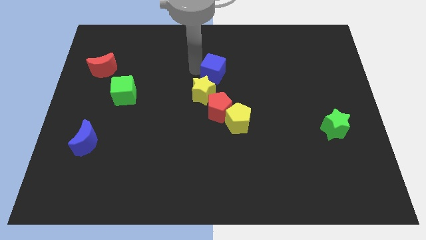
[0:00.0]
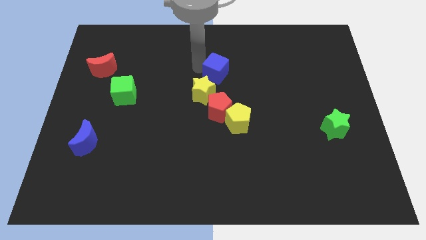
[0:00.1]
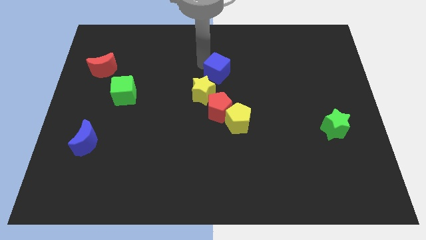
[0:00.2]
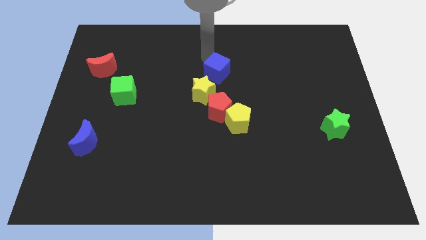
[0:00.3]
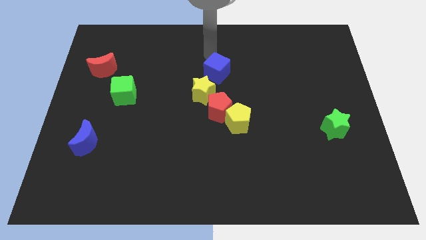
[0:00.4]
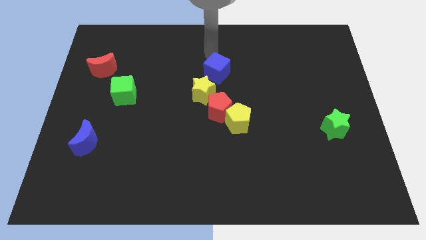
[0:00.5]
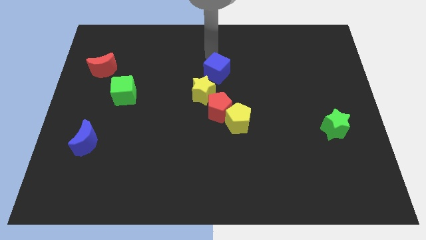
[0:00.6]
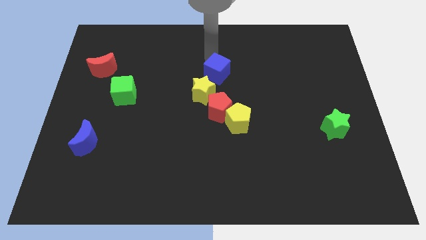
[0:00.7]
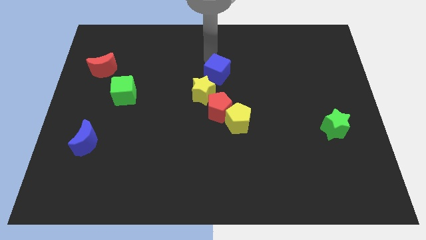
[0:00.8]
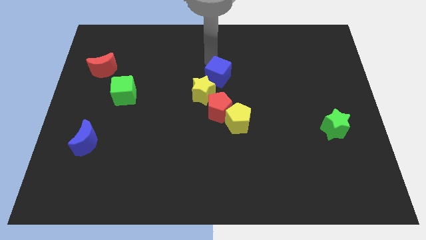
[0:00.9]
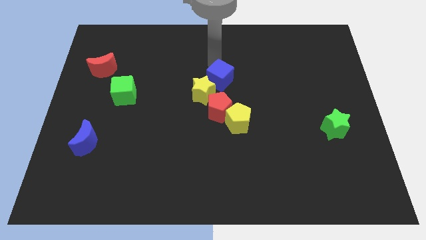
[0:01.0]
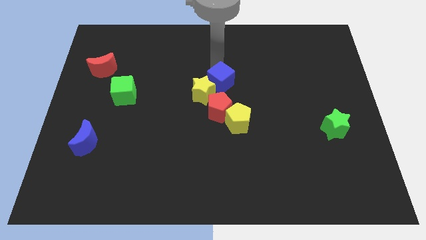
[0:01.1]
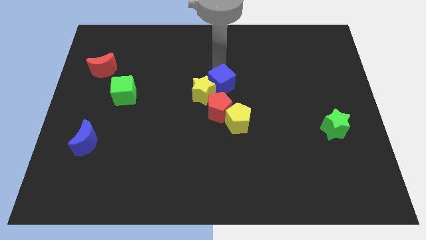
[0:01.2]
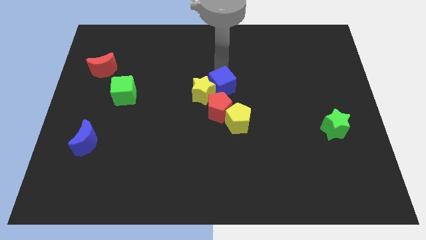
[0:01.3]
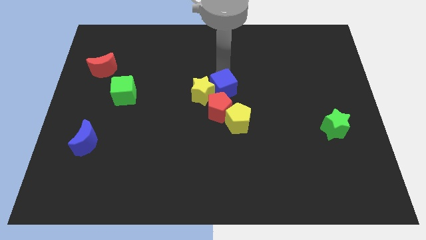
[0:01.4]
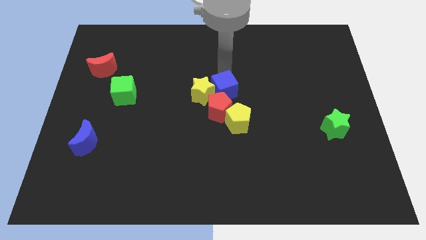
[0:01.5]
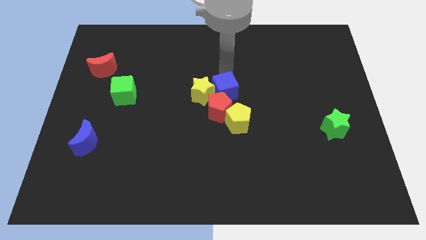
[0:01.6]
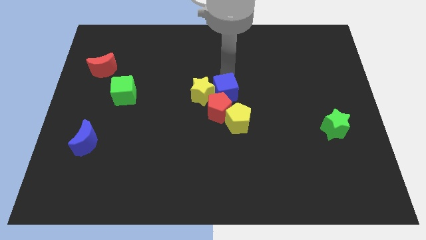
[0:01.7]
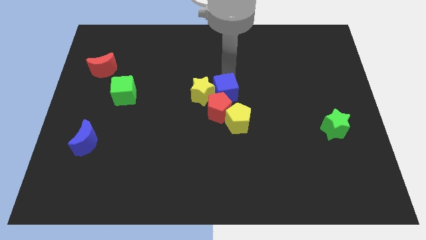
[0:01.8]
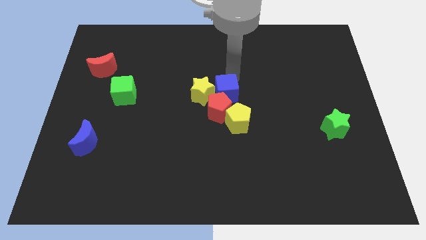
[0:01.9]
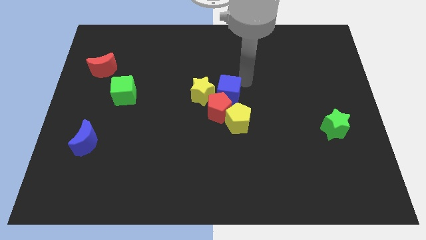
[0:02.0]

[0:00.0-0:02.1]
move the blue cube on top of the red pentagon

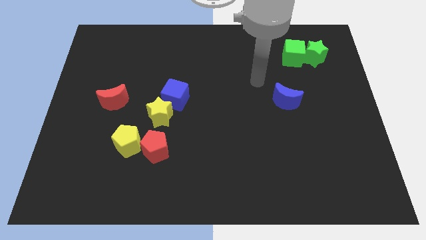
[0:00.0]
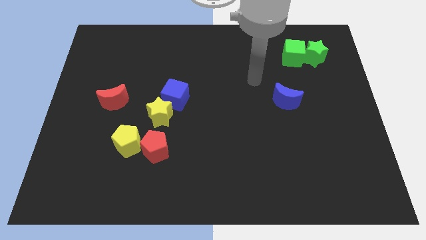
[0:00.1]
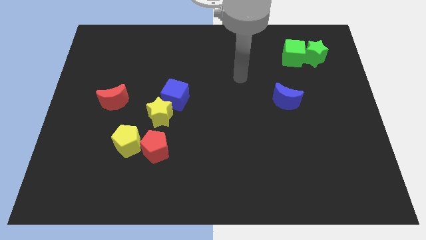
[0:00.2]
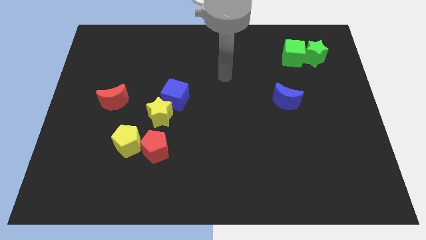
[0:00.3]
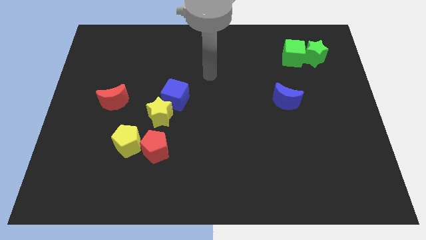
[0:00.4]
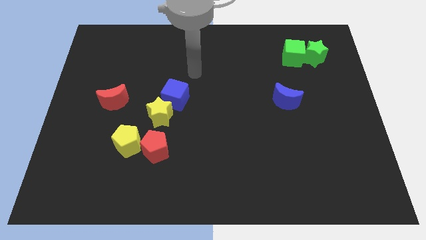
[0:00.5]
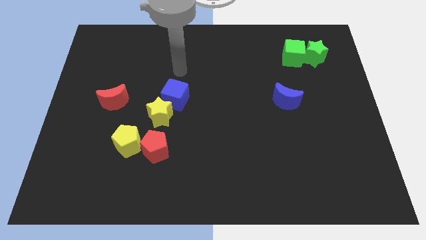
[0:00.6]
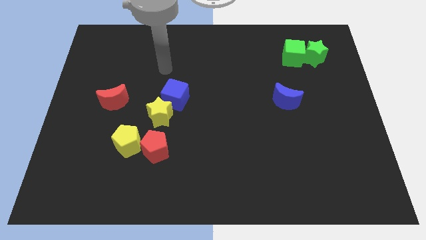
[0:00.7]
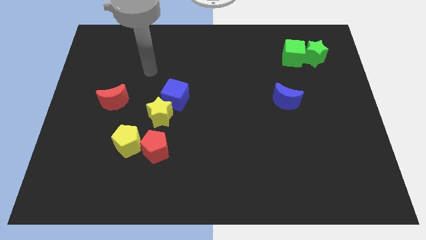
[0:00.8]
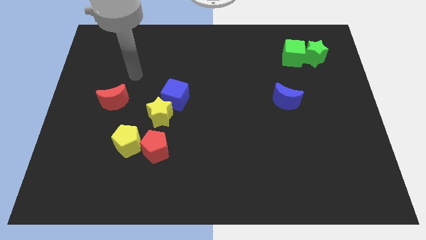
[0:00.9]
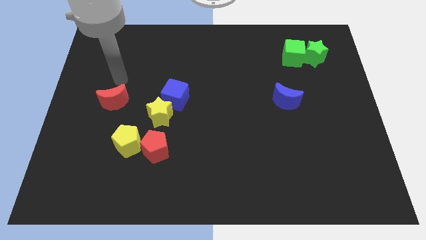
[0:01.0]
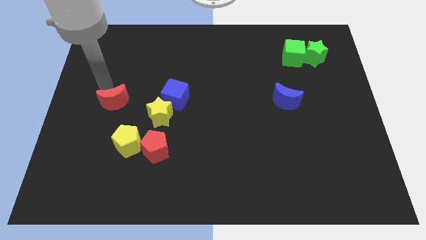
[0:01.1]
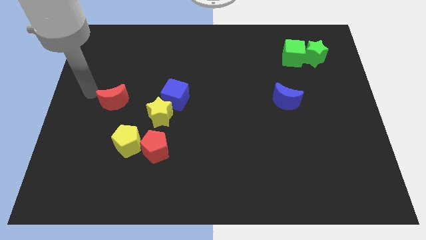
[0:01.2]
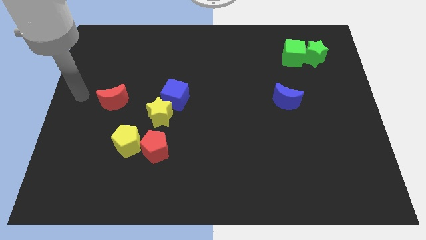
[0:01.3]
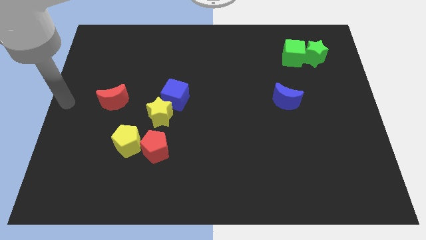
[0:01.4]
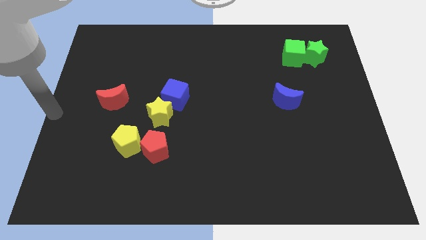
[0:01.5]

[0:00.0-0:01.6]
put your hand at the center left corner

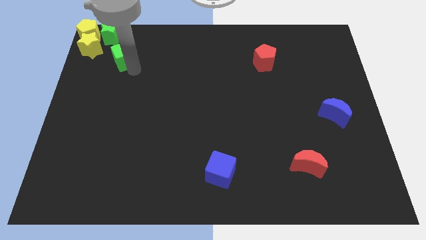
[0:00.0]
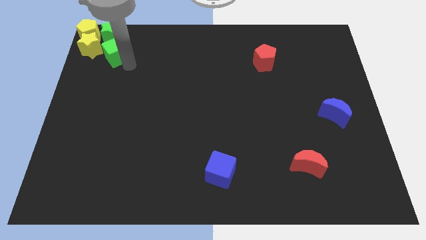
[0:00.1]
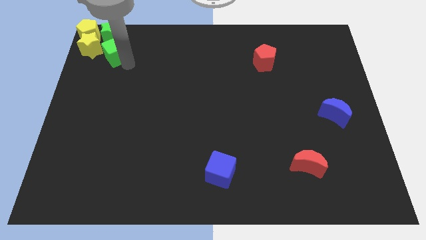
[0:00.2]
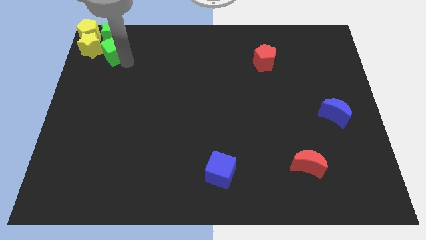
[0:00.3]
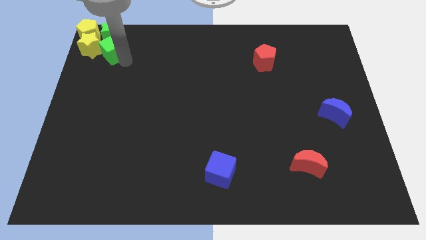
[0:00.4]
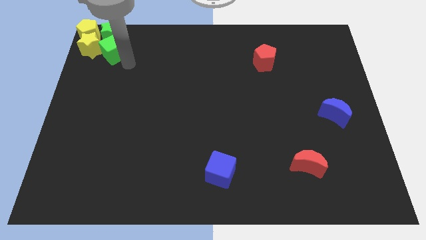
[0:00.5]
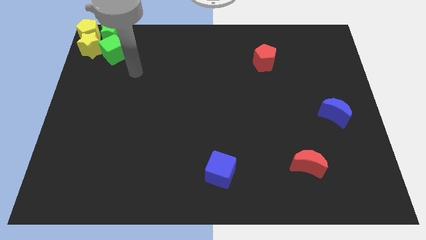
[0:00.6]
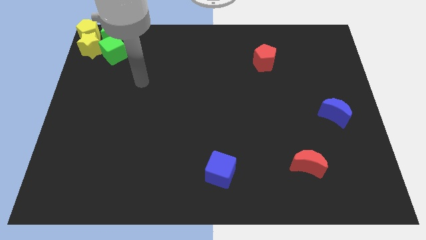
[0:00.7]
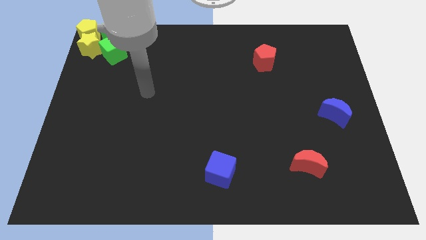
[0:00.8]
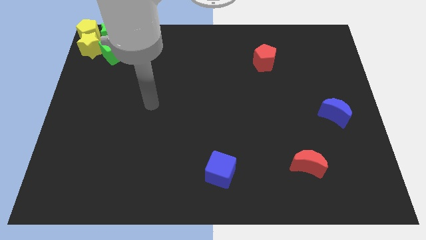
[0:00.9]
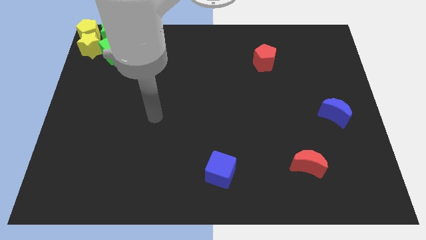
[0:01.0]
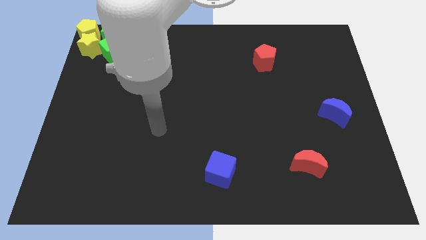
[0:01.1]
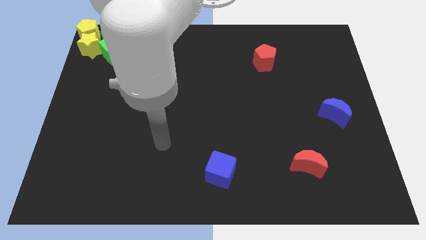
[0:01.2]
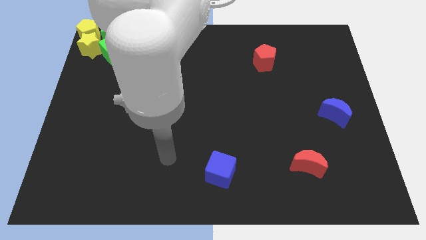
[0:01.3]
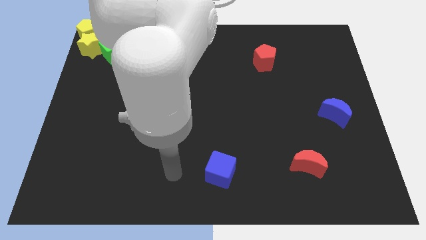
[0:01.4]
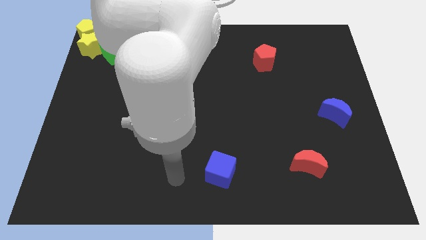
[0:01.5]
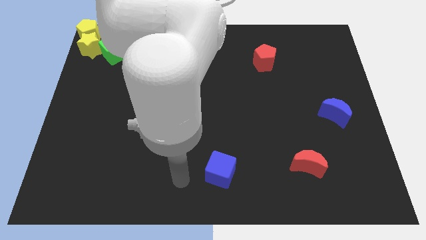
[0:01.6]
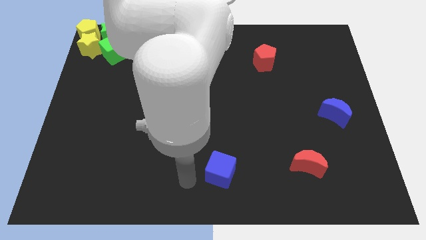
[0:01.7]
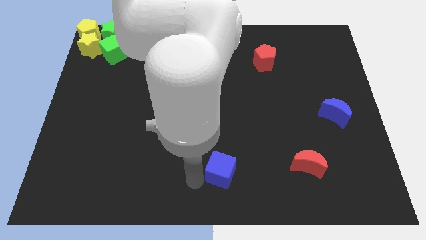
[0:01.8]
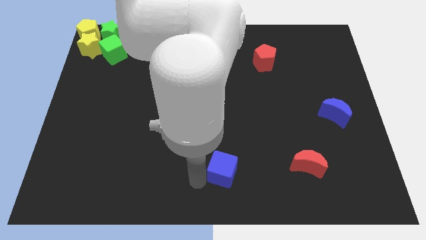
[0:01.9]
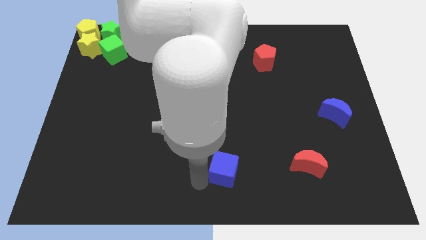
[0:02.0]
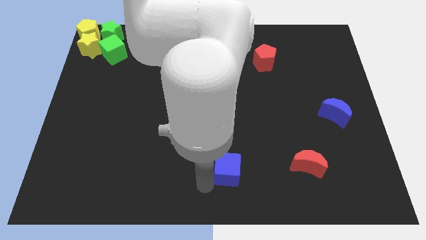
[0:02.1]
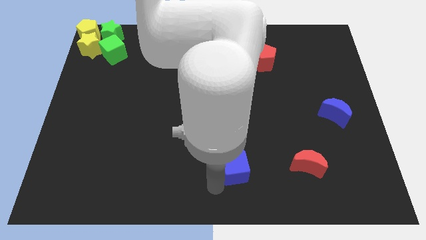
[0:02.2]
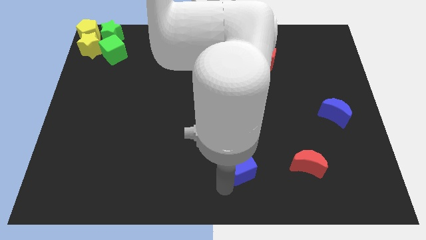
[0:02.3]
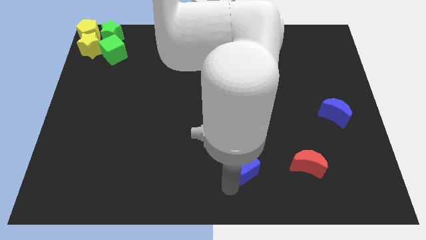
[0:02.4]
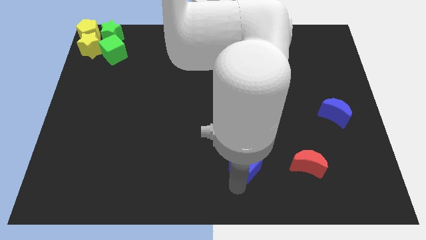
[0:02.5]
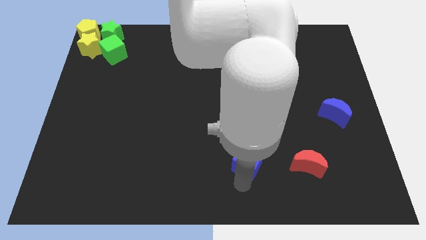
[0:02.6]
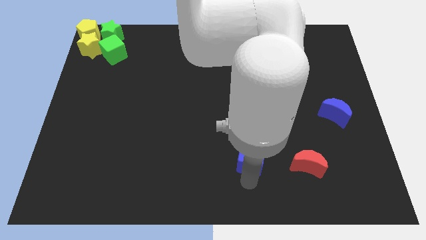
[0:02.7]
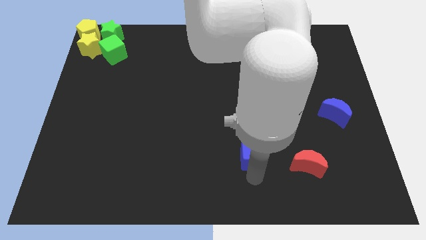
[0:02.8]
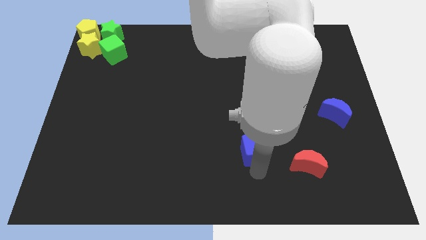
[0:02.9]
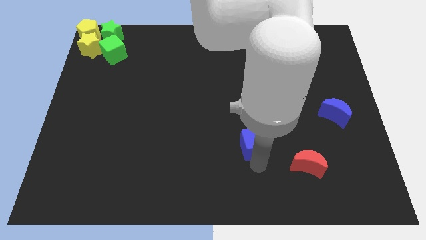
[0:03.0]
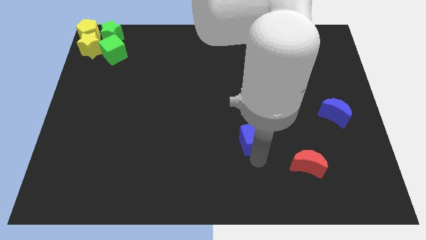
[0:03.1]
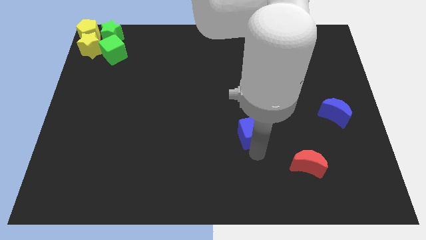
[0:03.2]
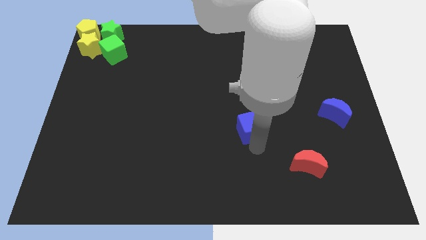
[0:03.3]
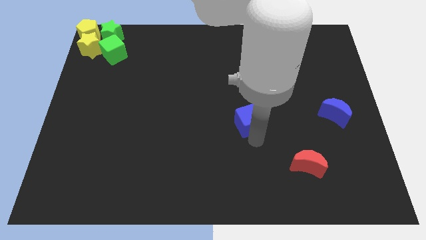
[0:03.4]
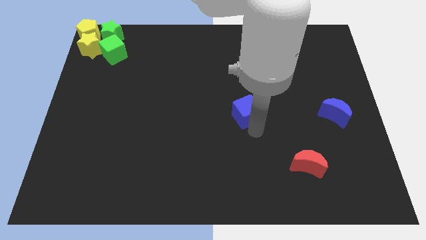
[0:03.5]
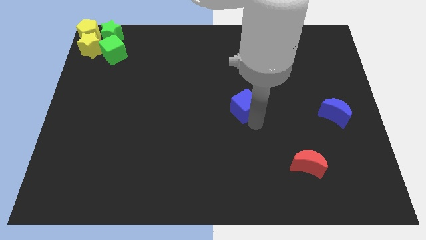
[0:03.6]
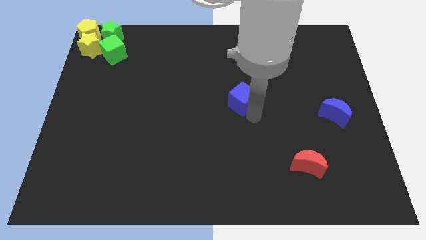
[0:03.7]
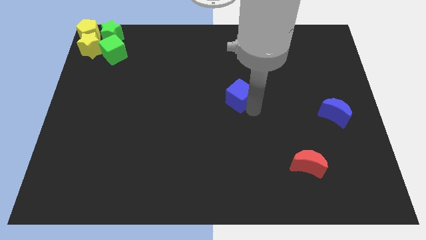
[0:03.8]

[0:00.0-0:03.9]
push the blue cube towards the center of the board

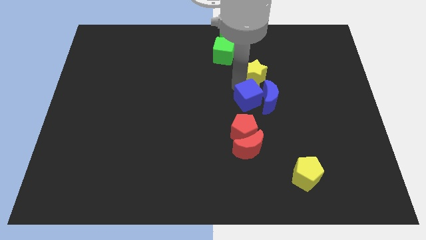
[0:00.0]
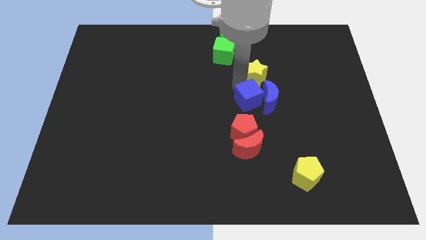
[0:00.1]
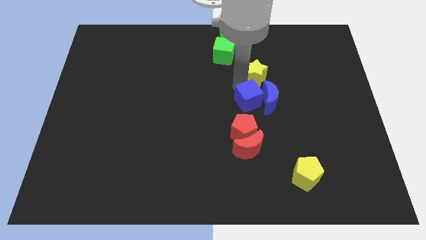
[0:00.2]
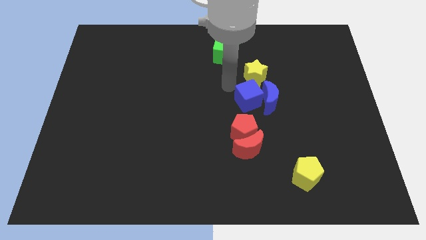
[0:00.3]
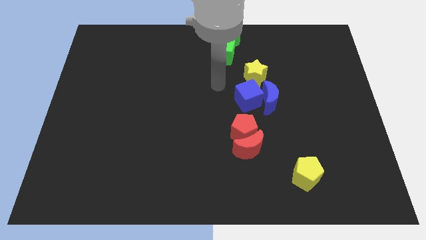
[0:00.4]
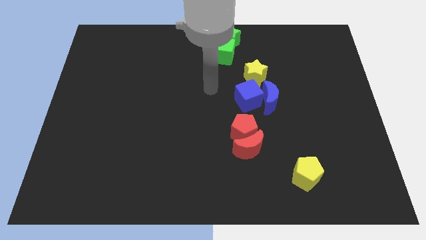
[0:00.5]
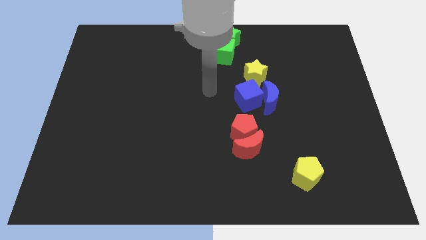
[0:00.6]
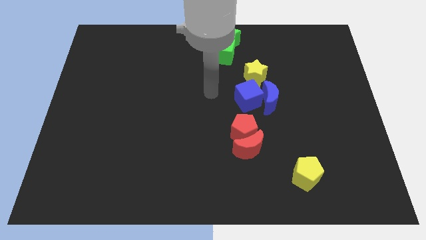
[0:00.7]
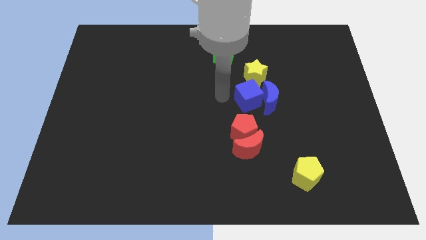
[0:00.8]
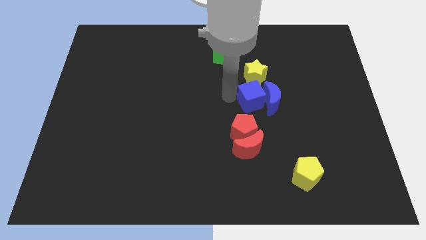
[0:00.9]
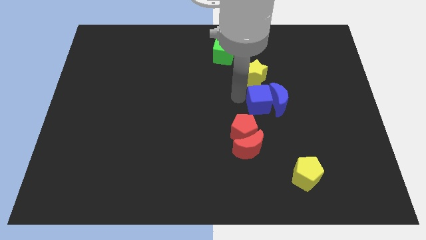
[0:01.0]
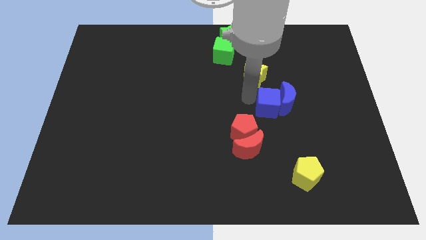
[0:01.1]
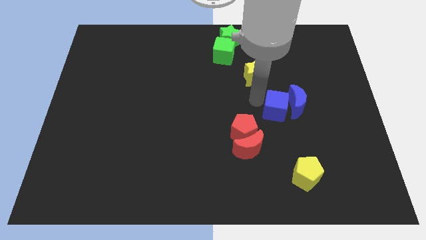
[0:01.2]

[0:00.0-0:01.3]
slightly push the blue blocks to the right
